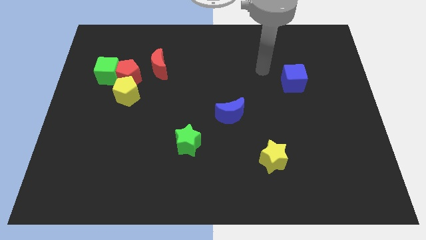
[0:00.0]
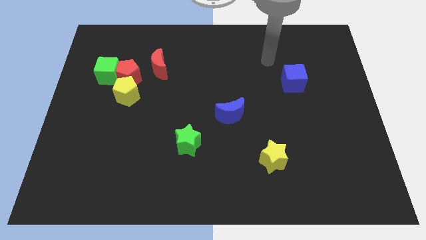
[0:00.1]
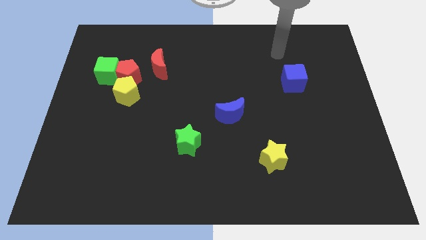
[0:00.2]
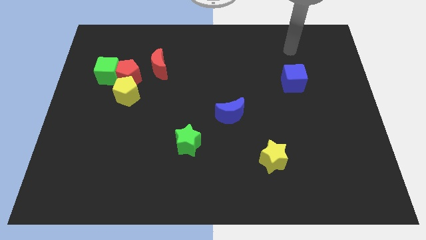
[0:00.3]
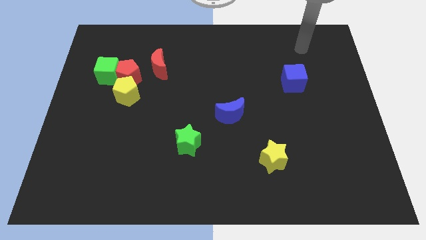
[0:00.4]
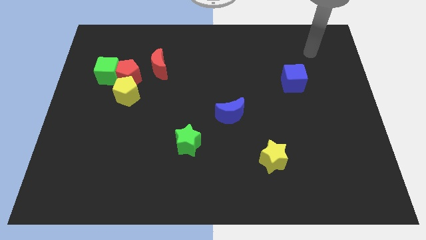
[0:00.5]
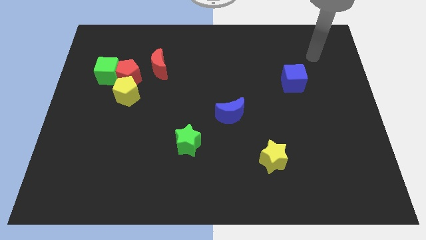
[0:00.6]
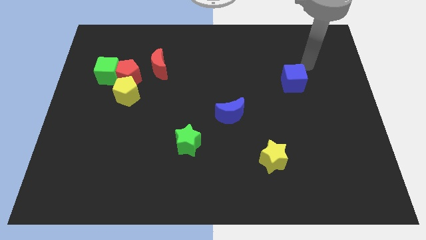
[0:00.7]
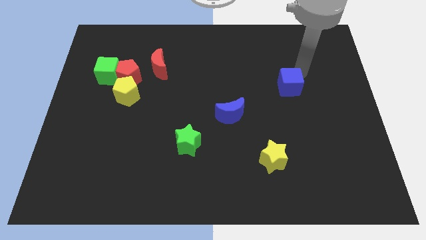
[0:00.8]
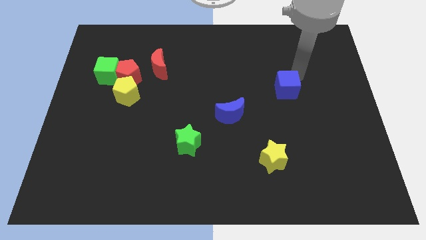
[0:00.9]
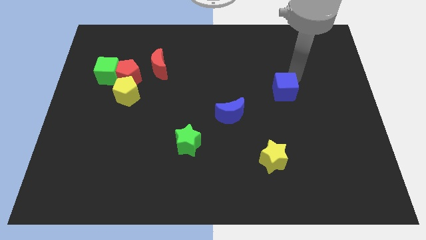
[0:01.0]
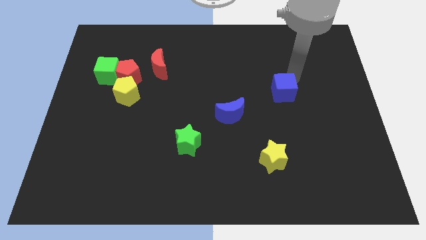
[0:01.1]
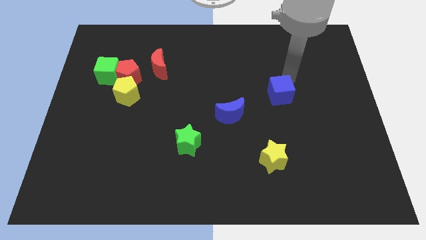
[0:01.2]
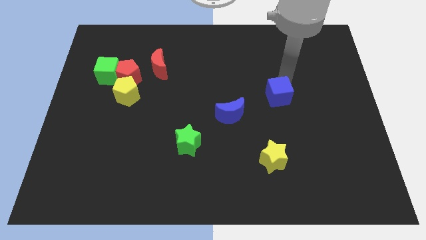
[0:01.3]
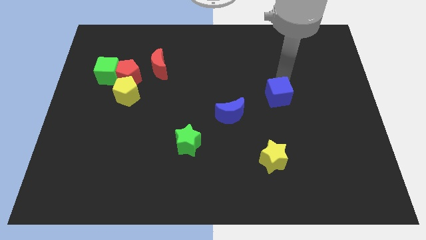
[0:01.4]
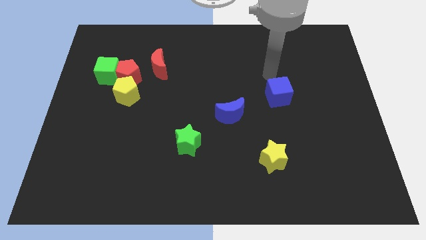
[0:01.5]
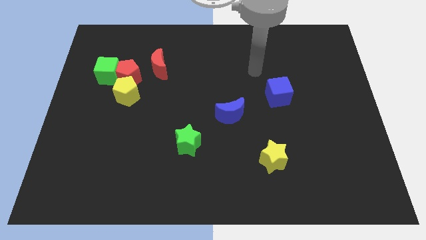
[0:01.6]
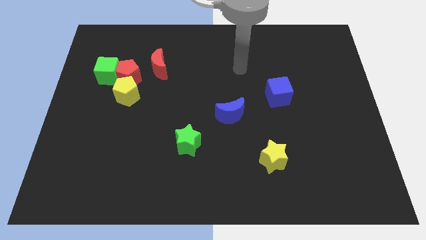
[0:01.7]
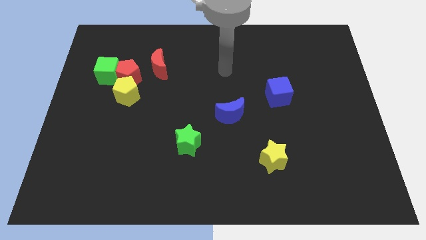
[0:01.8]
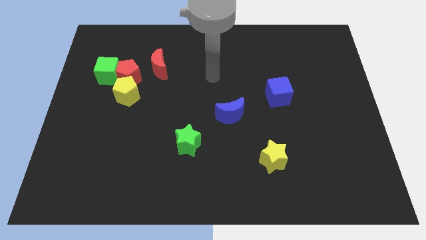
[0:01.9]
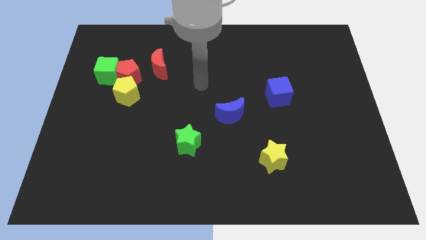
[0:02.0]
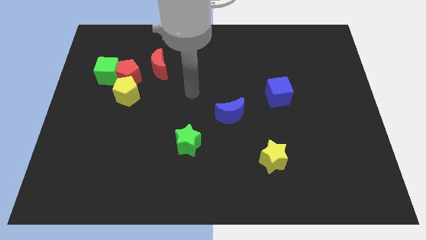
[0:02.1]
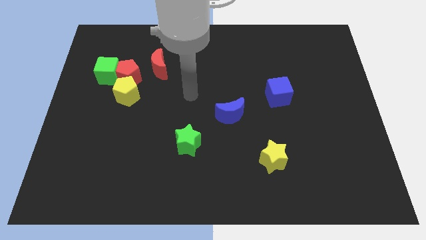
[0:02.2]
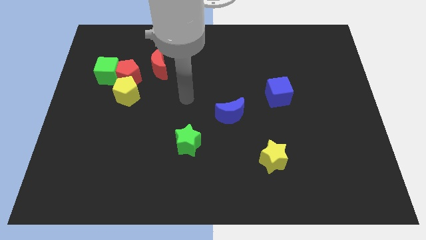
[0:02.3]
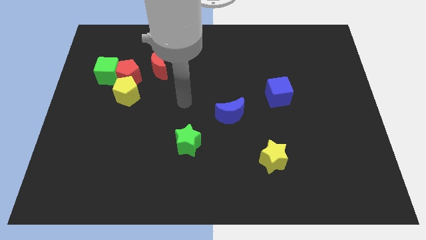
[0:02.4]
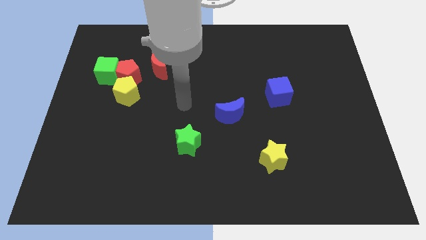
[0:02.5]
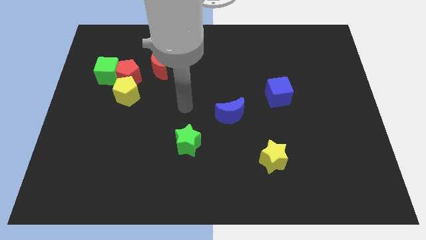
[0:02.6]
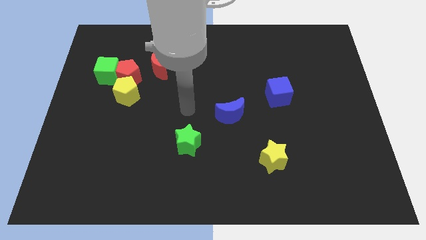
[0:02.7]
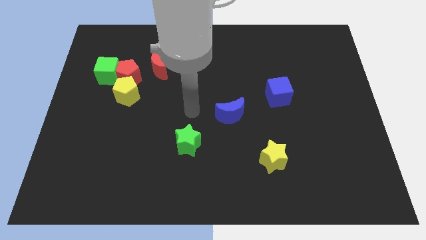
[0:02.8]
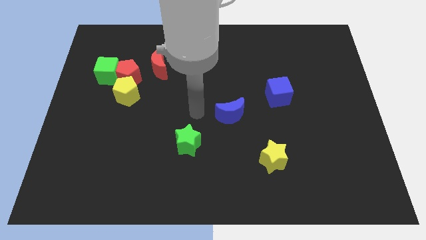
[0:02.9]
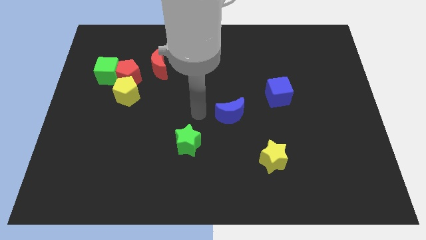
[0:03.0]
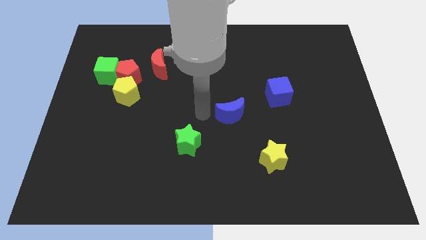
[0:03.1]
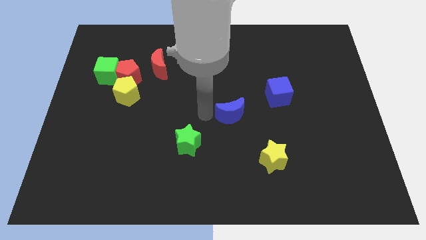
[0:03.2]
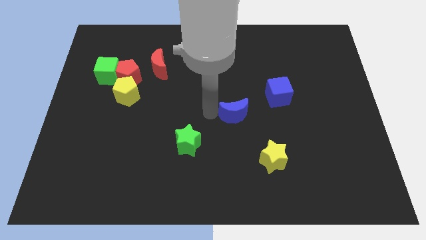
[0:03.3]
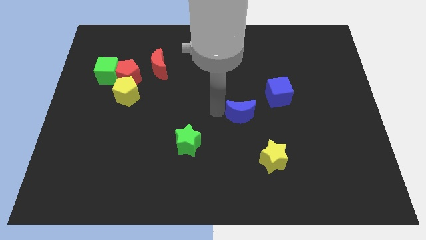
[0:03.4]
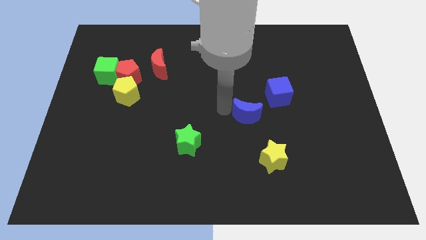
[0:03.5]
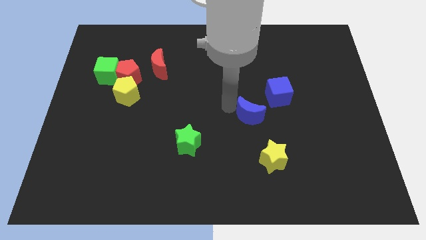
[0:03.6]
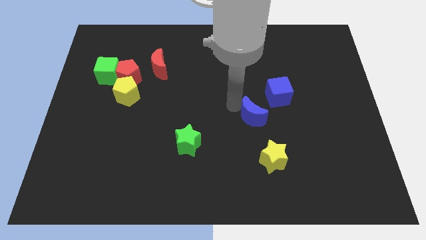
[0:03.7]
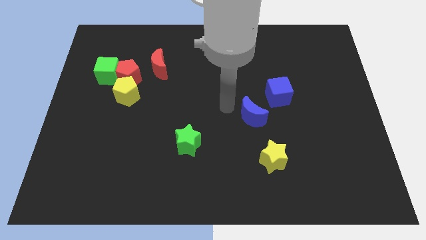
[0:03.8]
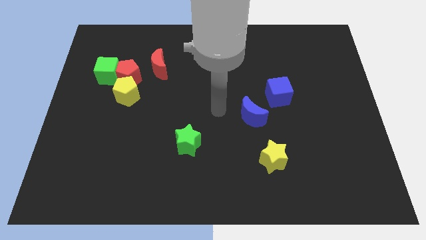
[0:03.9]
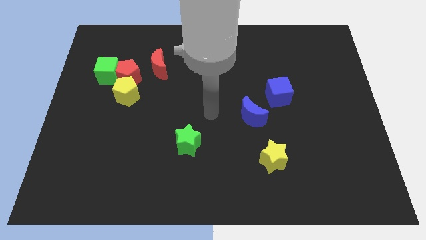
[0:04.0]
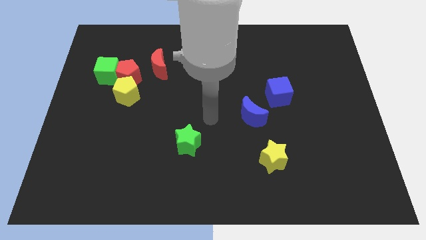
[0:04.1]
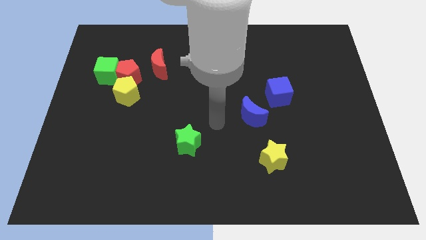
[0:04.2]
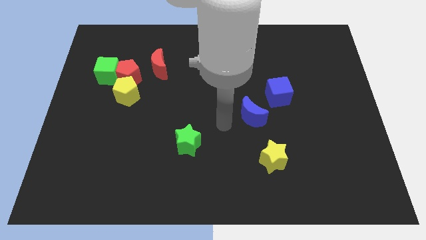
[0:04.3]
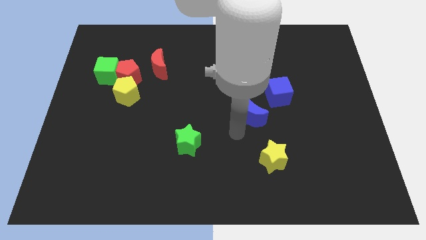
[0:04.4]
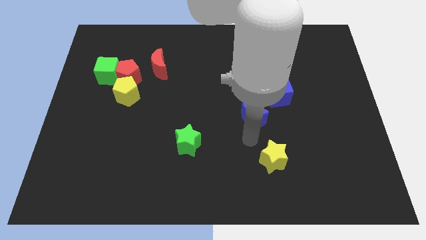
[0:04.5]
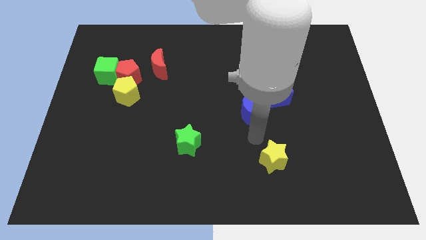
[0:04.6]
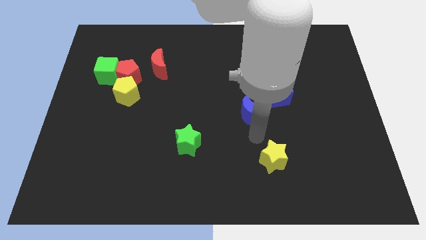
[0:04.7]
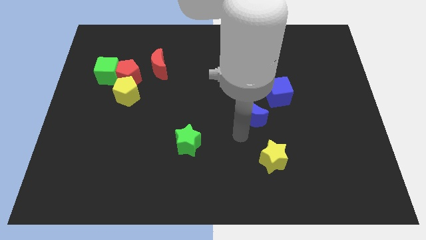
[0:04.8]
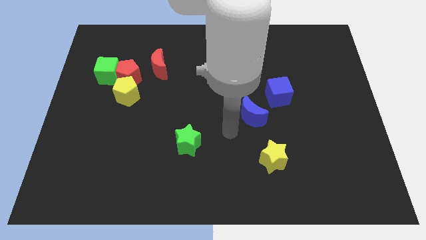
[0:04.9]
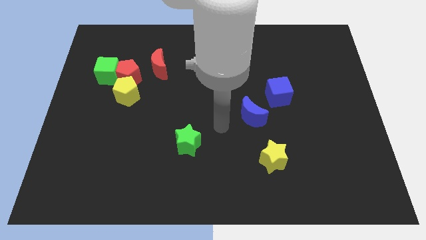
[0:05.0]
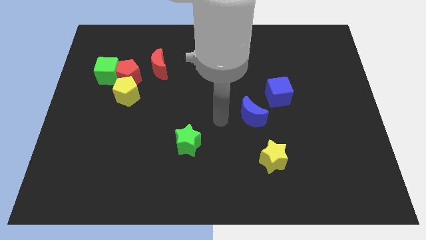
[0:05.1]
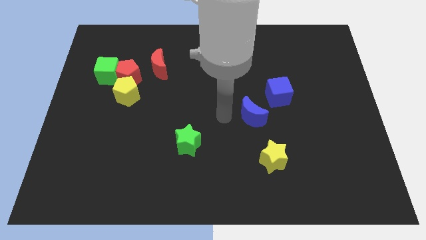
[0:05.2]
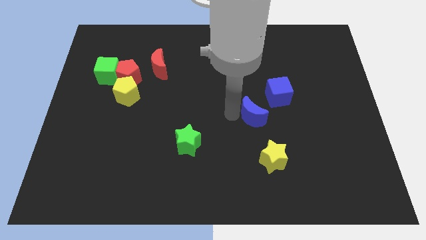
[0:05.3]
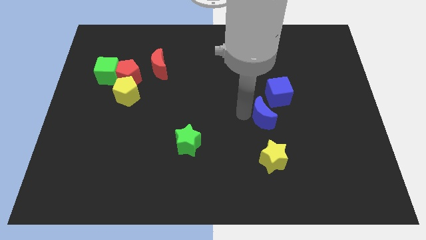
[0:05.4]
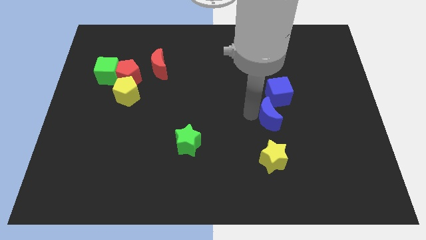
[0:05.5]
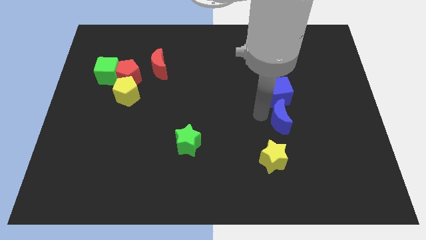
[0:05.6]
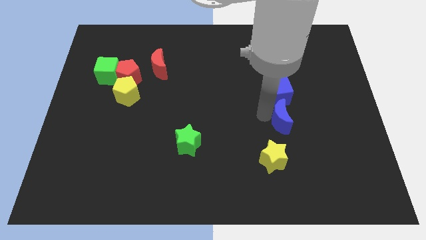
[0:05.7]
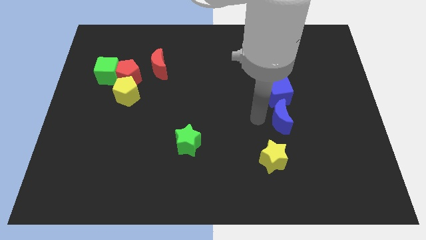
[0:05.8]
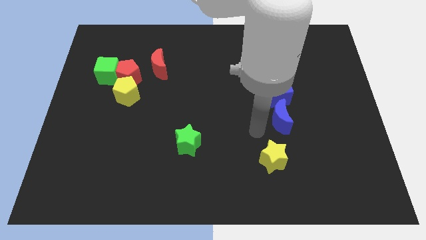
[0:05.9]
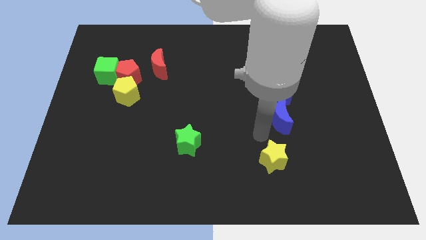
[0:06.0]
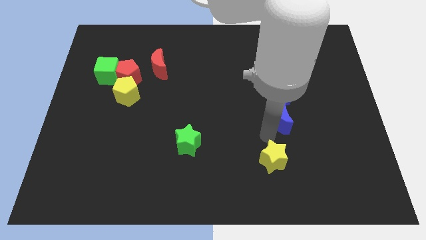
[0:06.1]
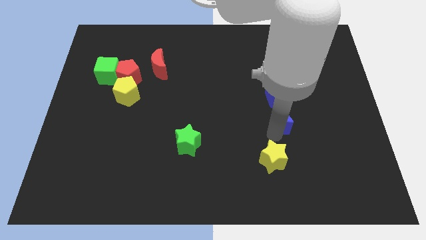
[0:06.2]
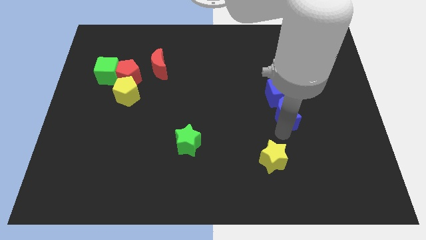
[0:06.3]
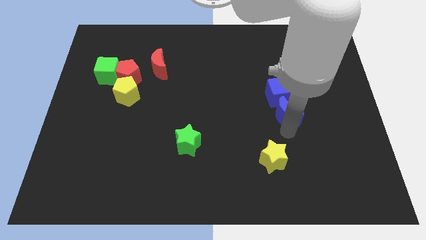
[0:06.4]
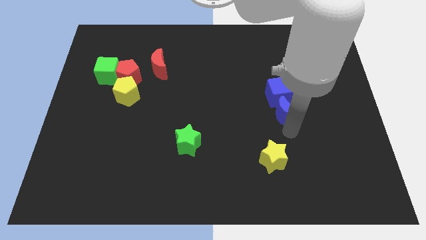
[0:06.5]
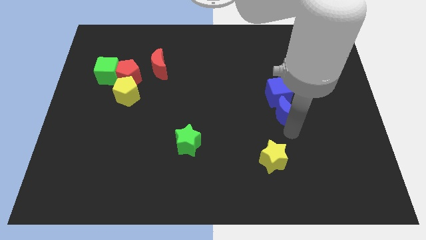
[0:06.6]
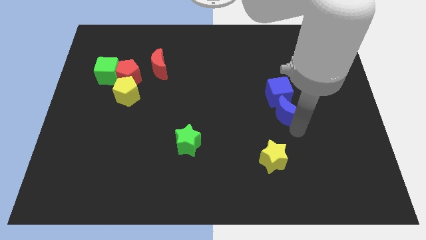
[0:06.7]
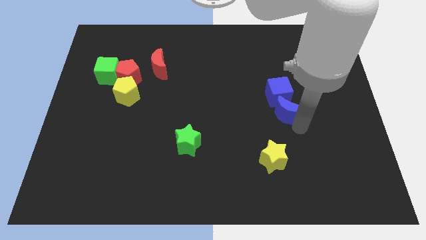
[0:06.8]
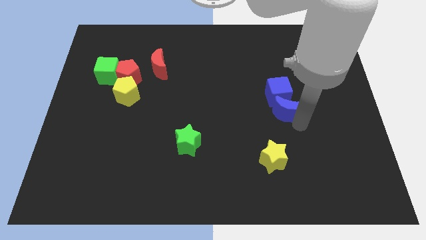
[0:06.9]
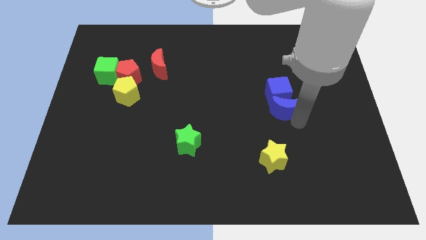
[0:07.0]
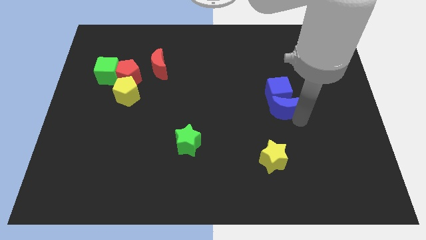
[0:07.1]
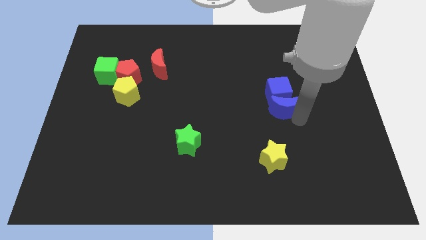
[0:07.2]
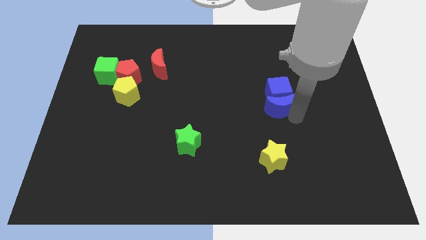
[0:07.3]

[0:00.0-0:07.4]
place the blue blocks above the top side of the yellow star

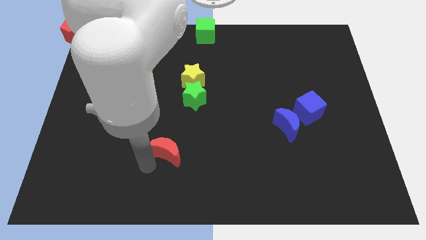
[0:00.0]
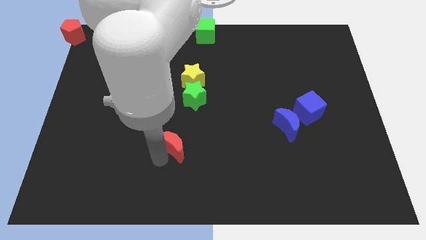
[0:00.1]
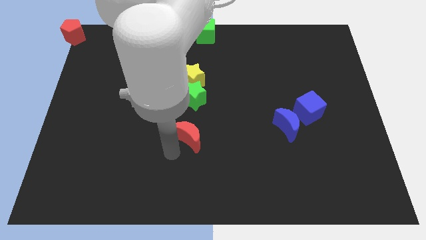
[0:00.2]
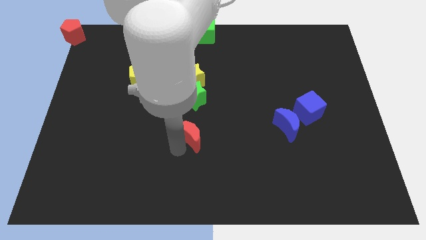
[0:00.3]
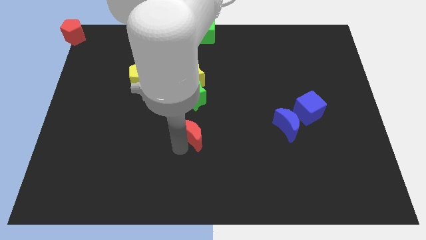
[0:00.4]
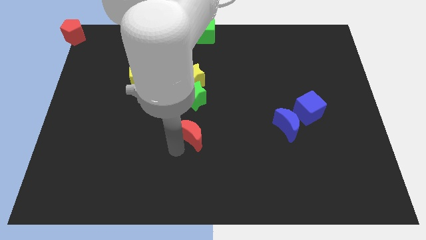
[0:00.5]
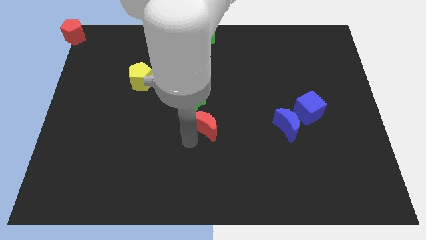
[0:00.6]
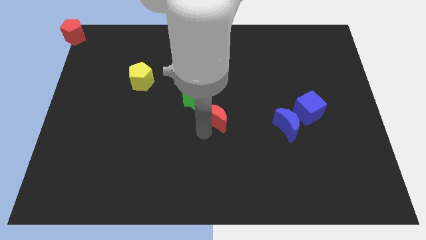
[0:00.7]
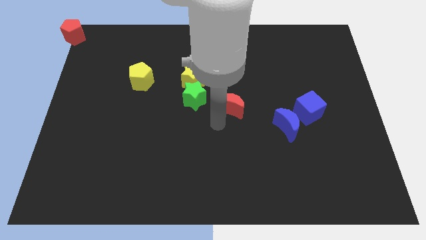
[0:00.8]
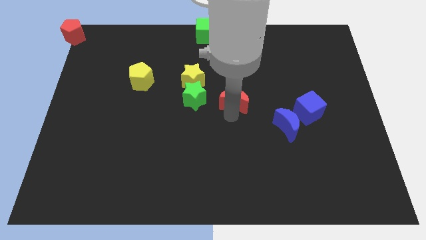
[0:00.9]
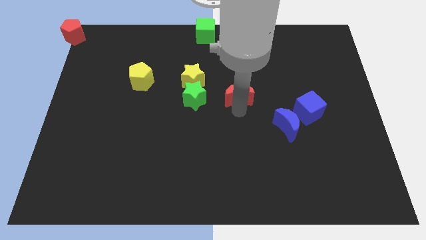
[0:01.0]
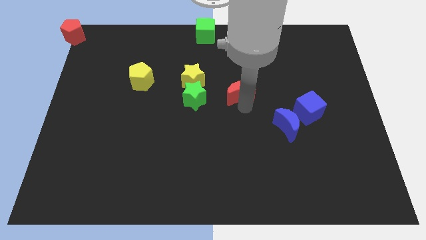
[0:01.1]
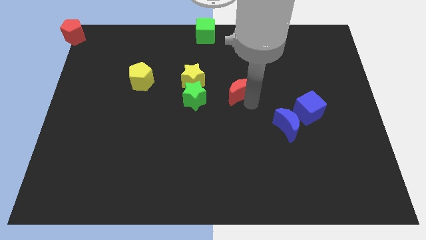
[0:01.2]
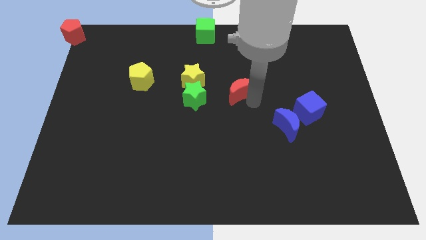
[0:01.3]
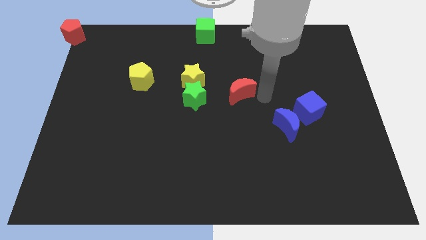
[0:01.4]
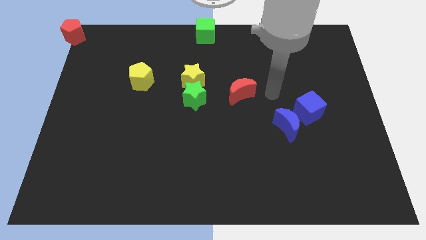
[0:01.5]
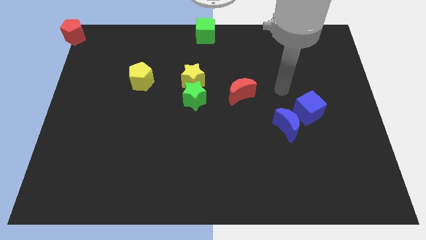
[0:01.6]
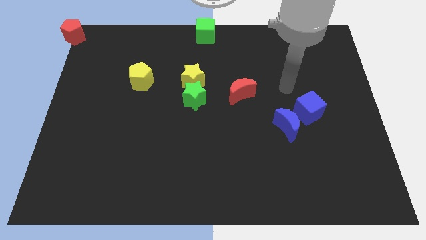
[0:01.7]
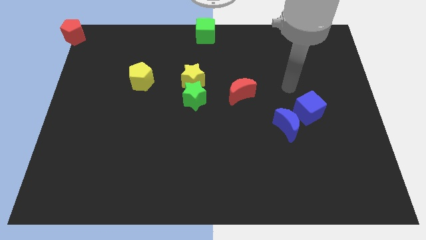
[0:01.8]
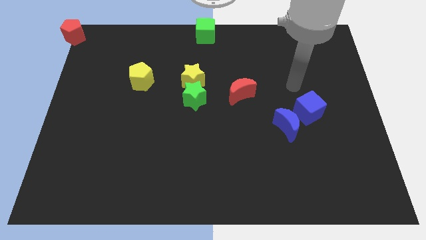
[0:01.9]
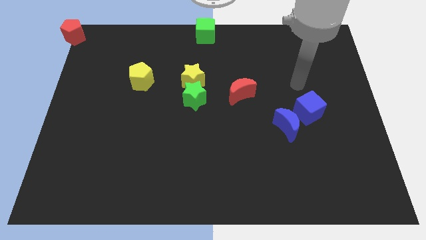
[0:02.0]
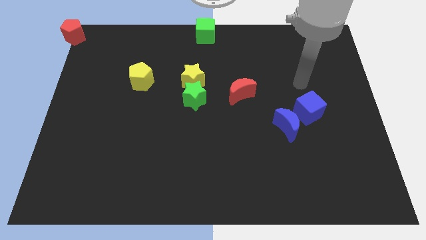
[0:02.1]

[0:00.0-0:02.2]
place the red moon to the right of the green star
